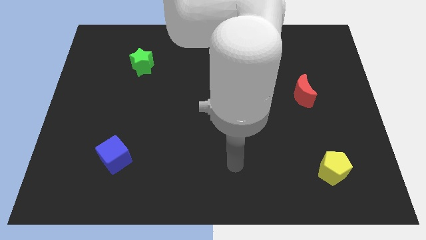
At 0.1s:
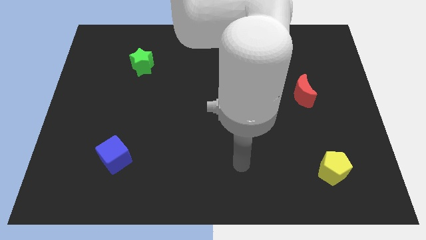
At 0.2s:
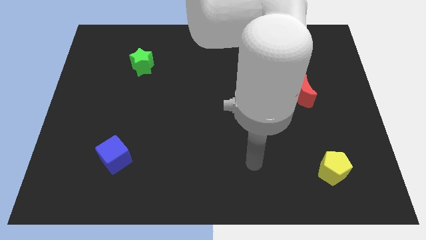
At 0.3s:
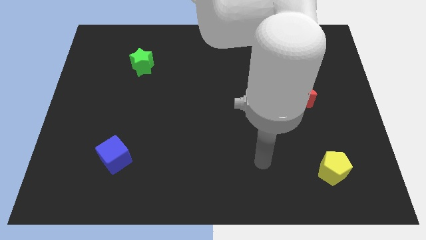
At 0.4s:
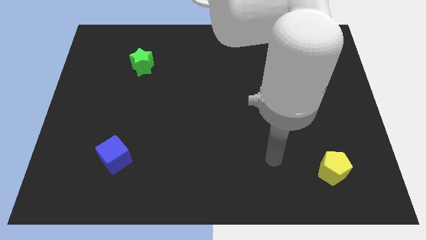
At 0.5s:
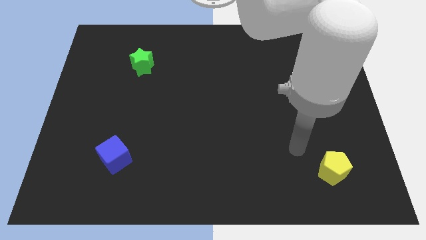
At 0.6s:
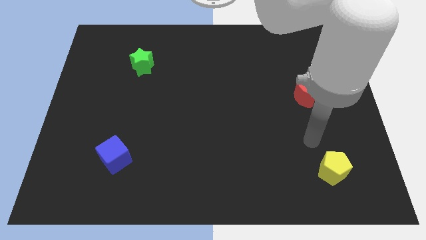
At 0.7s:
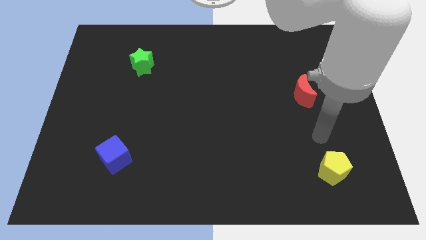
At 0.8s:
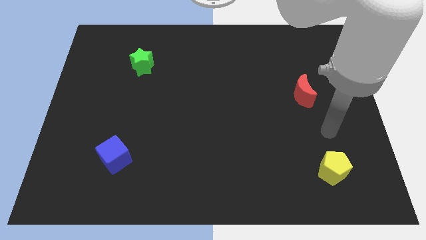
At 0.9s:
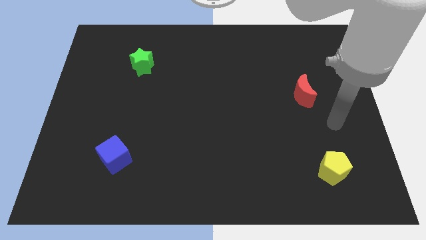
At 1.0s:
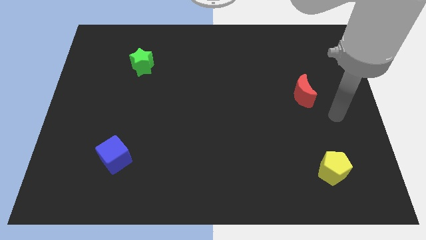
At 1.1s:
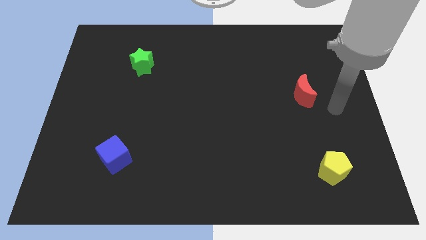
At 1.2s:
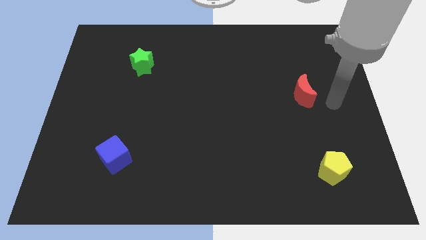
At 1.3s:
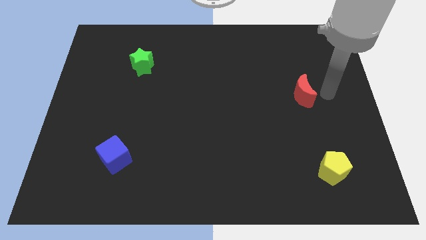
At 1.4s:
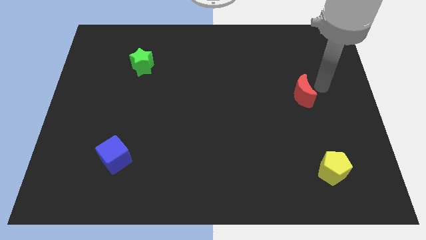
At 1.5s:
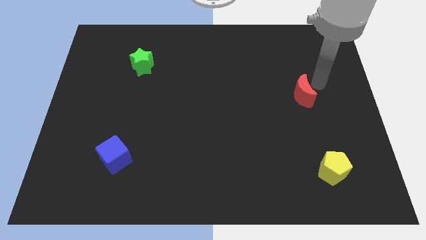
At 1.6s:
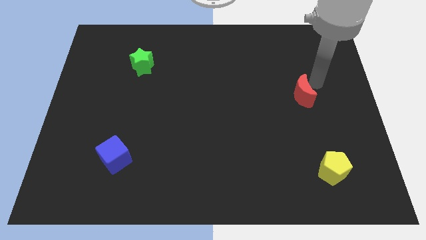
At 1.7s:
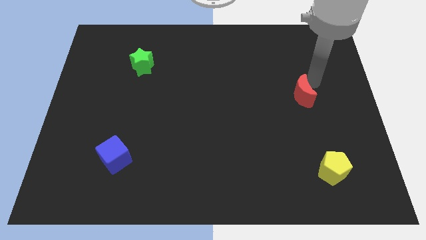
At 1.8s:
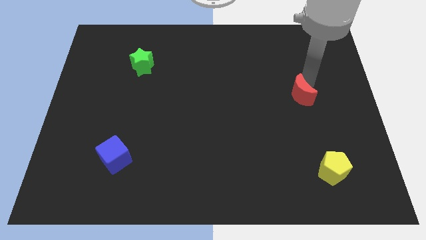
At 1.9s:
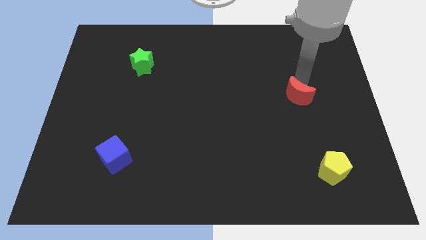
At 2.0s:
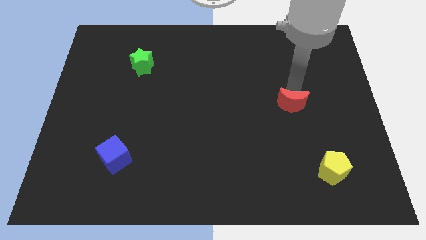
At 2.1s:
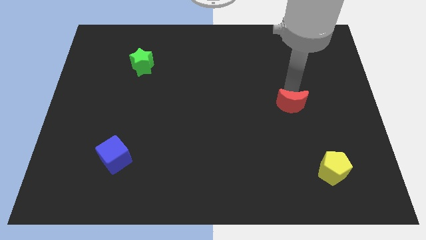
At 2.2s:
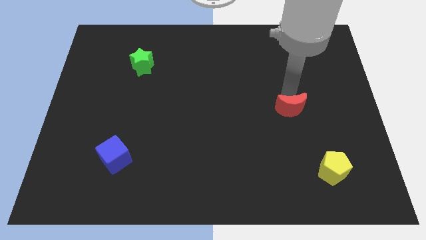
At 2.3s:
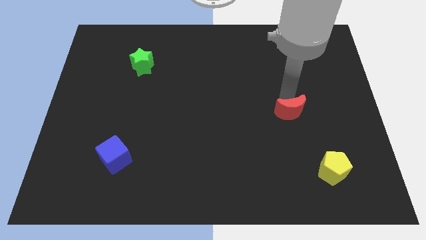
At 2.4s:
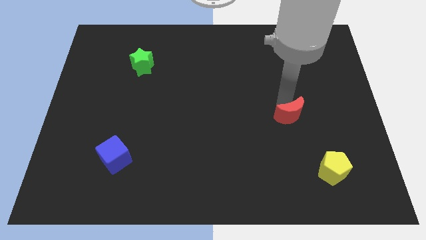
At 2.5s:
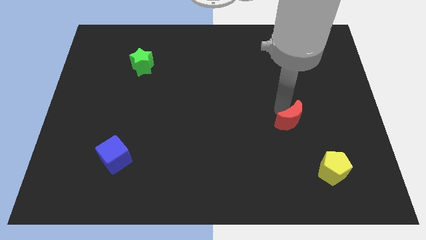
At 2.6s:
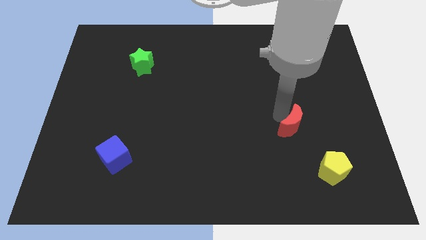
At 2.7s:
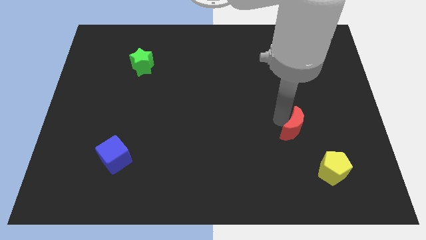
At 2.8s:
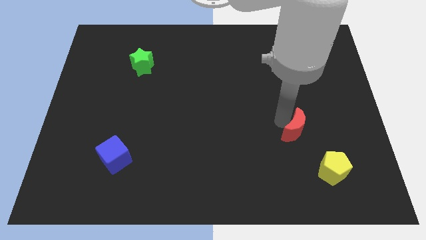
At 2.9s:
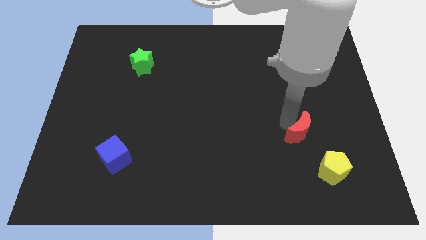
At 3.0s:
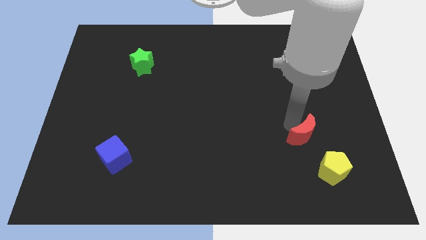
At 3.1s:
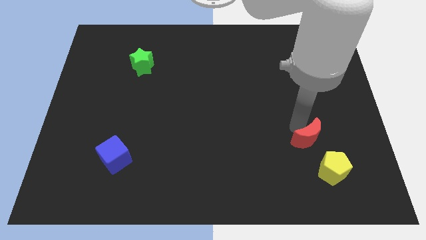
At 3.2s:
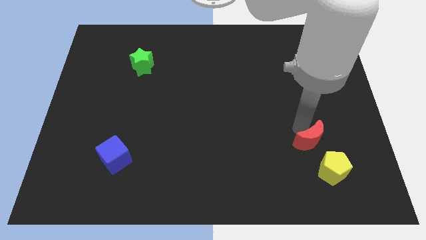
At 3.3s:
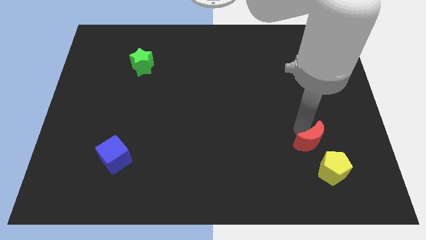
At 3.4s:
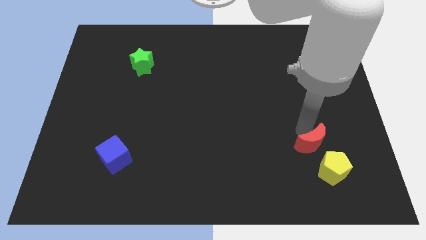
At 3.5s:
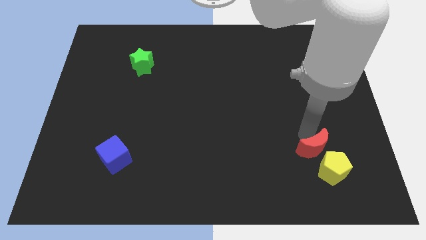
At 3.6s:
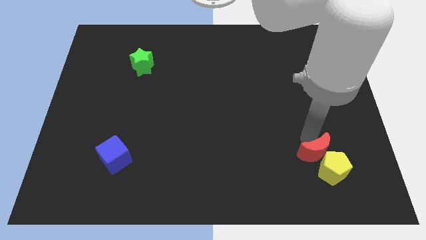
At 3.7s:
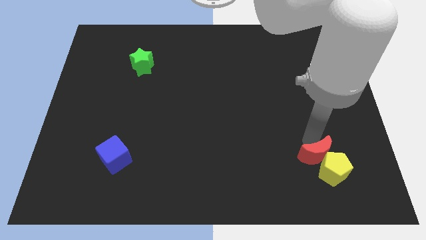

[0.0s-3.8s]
push the red moon next to the pentagon

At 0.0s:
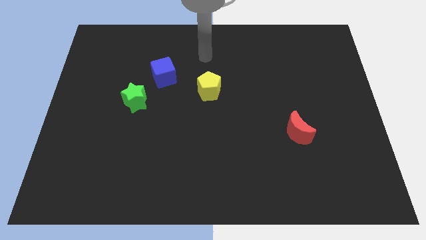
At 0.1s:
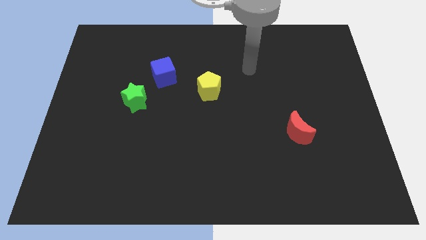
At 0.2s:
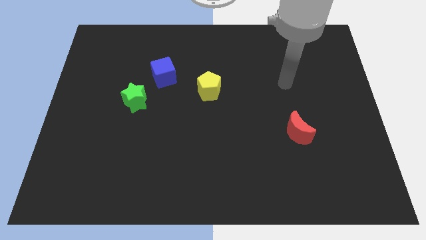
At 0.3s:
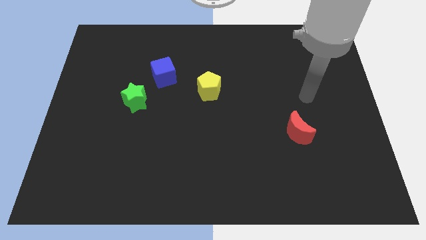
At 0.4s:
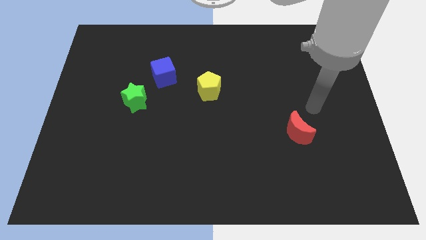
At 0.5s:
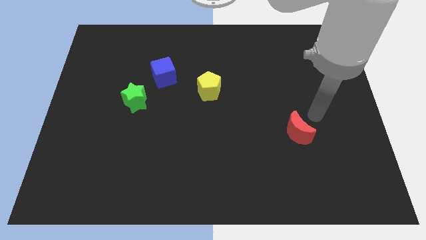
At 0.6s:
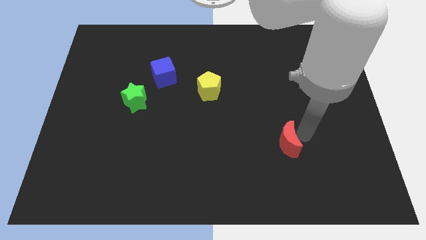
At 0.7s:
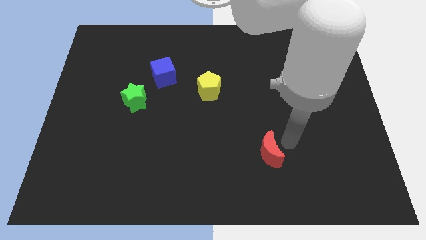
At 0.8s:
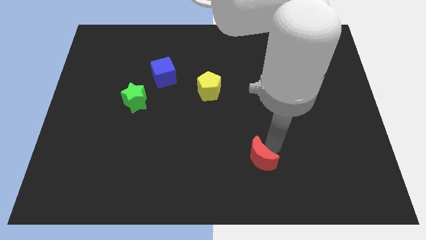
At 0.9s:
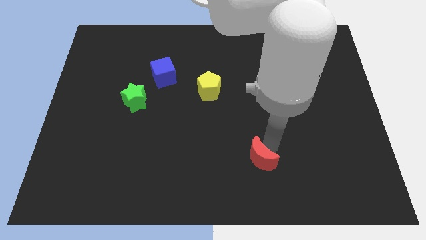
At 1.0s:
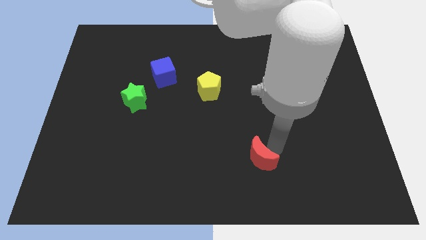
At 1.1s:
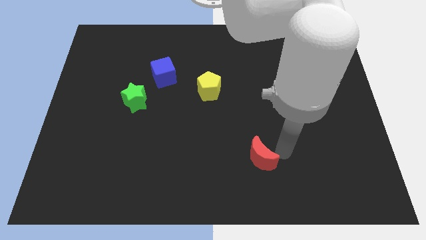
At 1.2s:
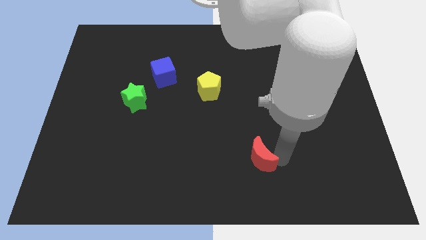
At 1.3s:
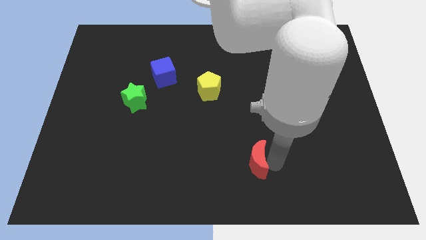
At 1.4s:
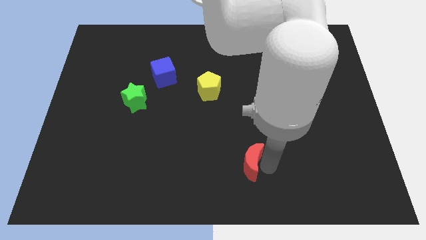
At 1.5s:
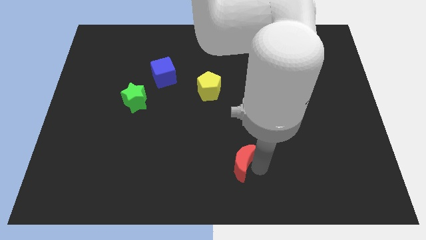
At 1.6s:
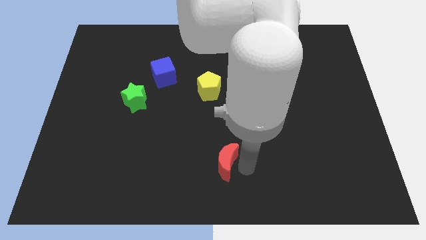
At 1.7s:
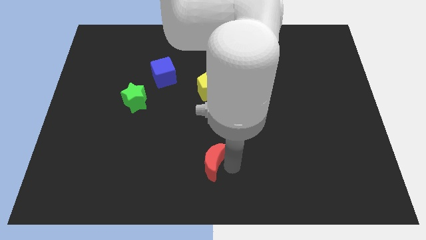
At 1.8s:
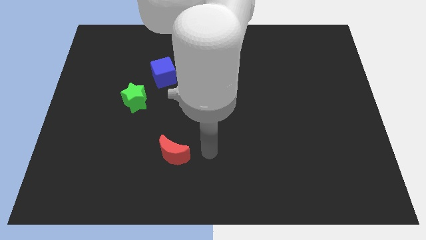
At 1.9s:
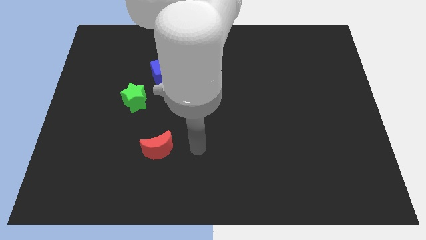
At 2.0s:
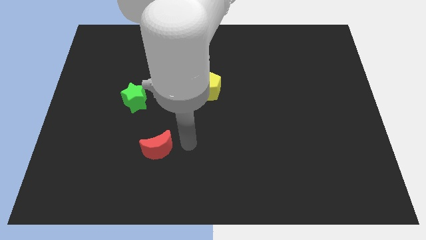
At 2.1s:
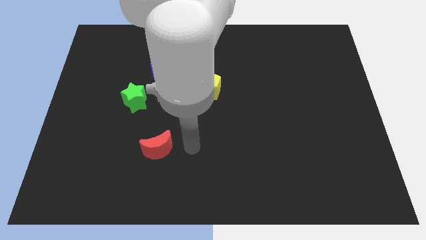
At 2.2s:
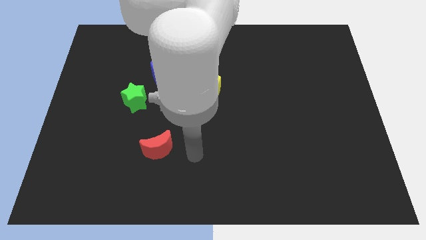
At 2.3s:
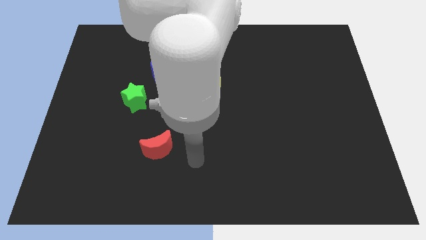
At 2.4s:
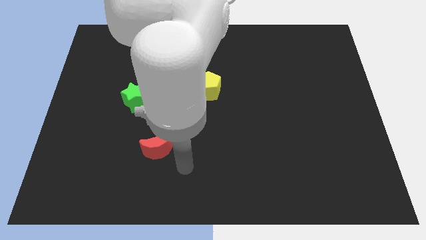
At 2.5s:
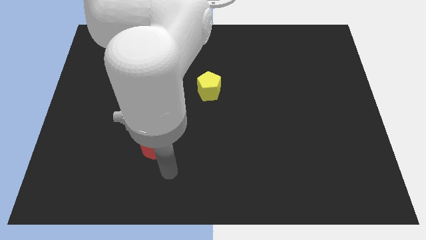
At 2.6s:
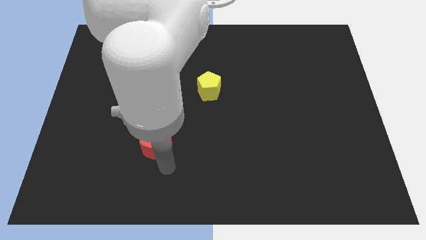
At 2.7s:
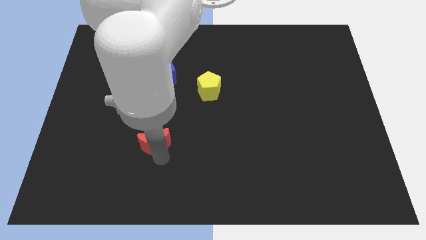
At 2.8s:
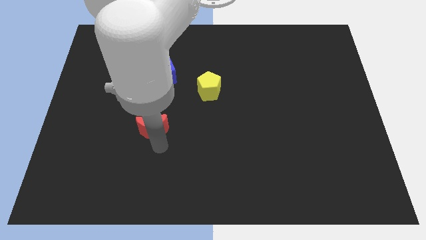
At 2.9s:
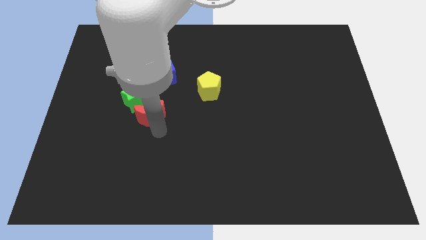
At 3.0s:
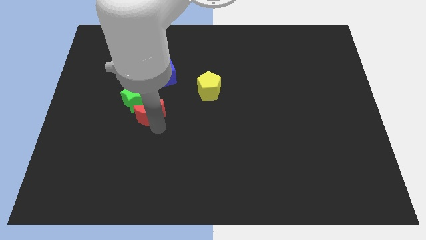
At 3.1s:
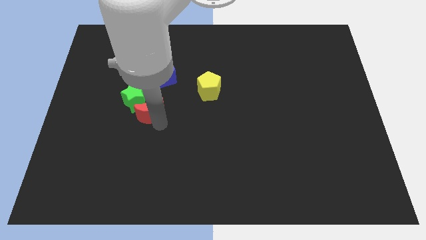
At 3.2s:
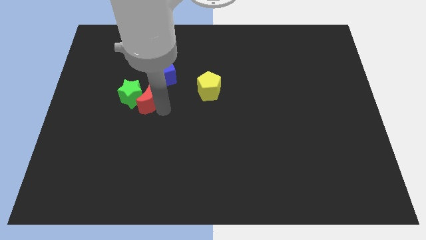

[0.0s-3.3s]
push the moon next to the star

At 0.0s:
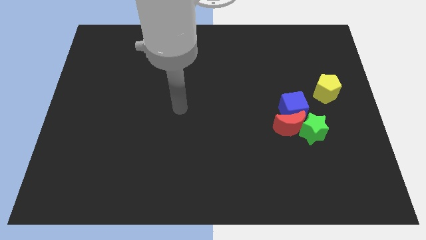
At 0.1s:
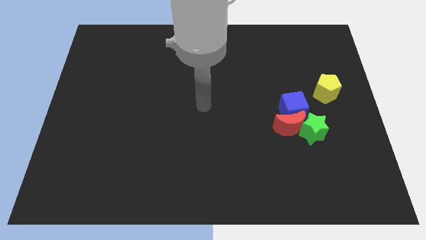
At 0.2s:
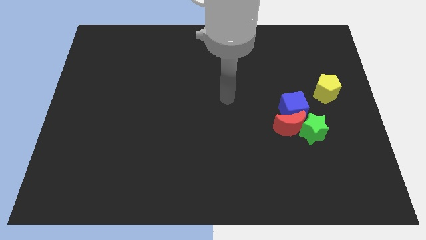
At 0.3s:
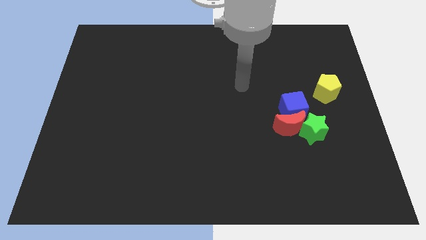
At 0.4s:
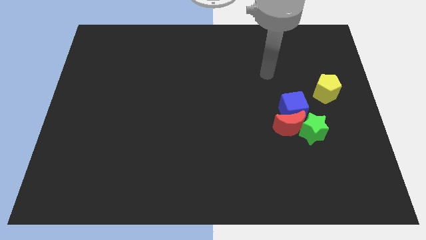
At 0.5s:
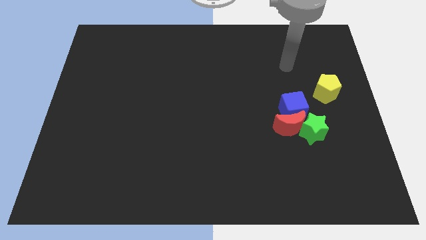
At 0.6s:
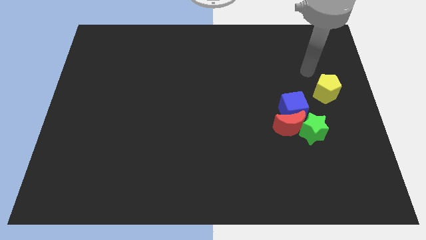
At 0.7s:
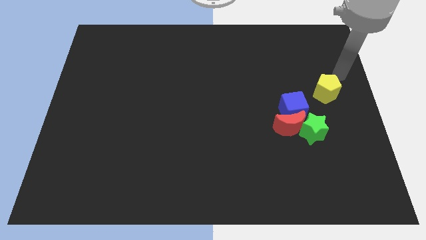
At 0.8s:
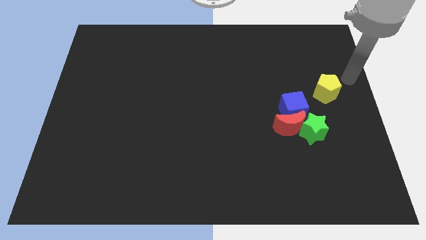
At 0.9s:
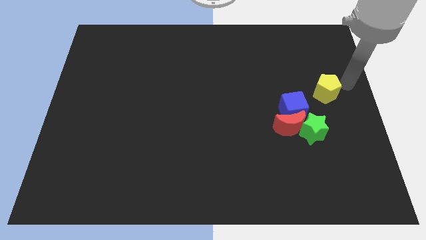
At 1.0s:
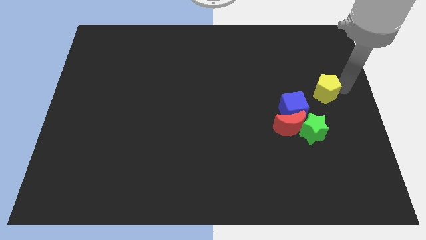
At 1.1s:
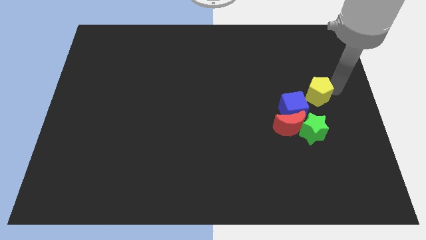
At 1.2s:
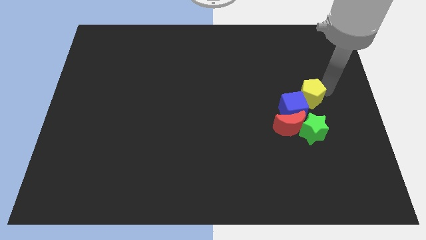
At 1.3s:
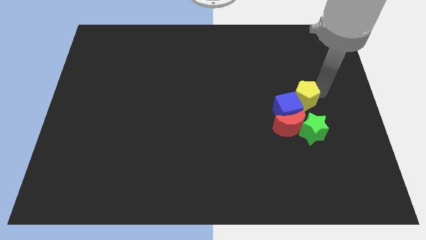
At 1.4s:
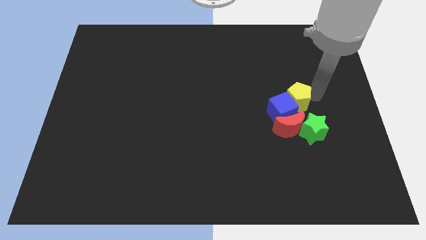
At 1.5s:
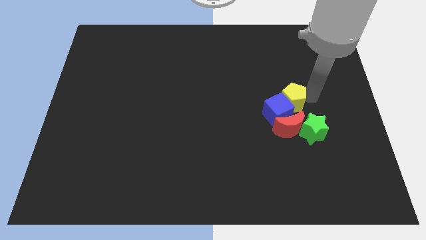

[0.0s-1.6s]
move the yellow pentagon towards the blue block
